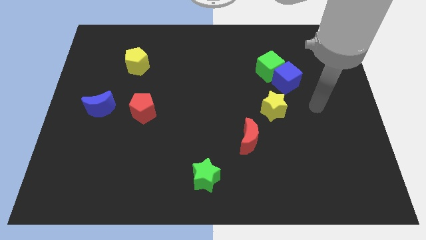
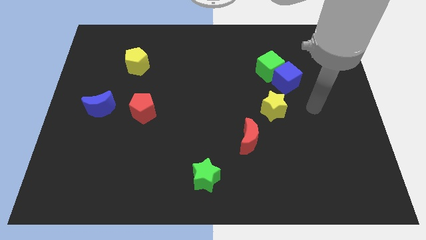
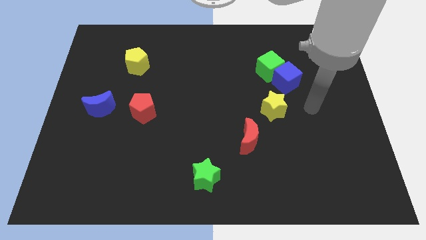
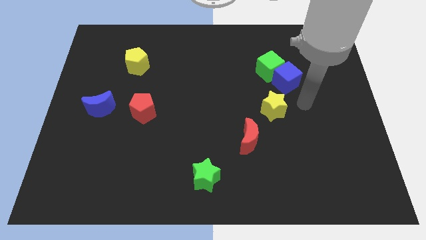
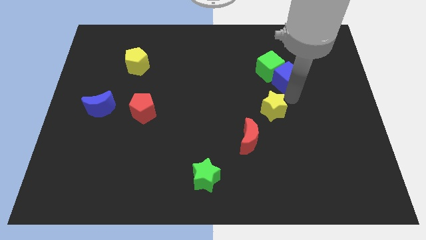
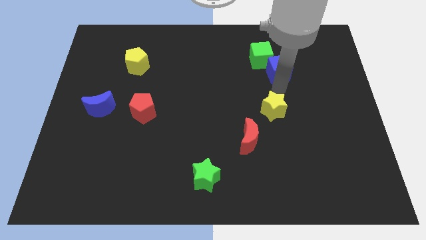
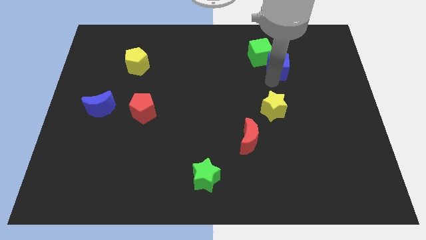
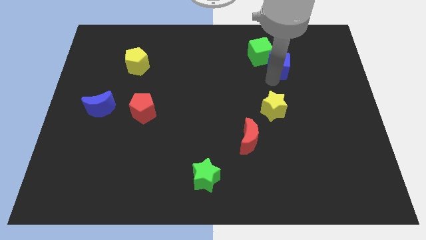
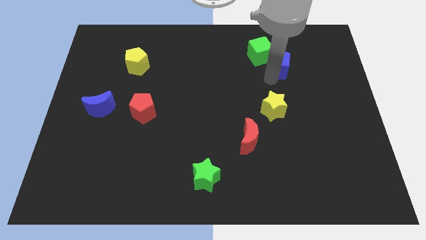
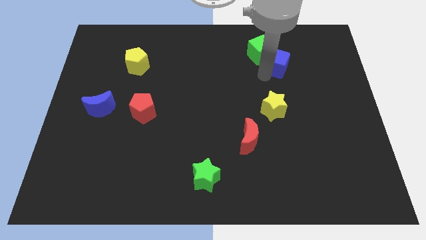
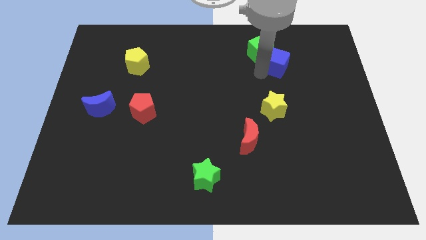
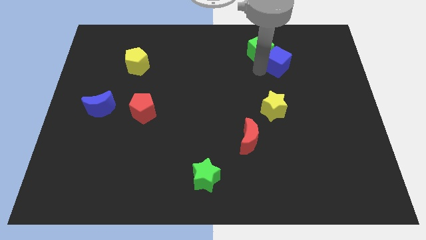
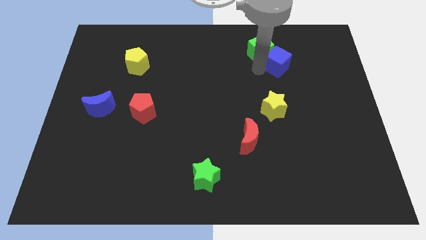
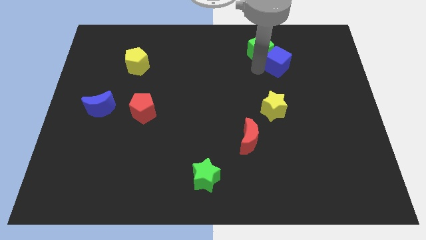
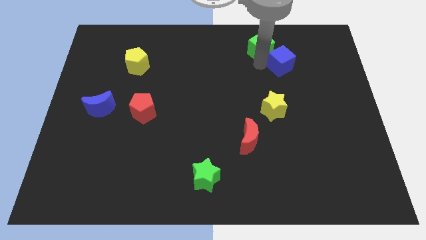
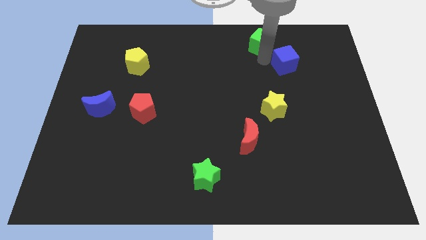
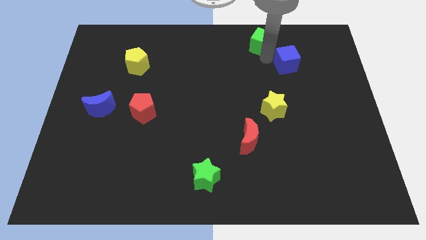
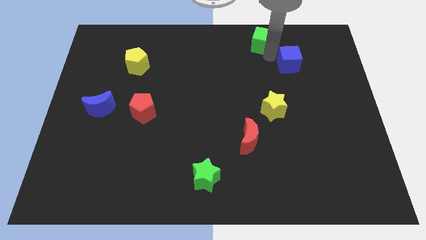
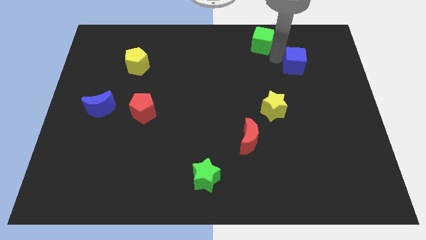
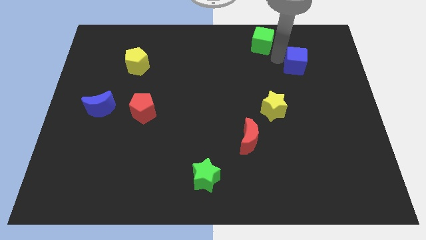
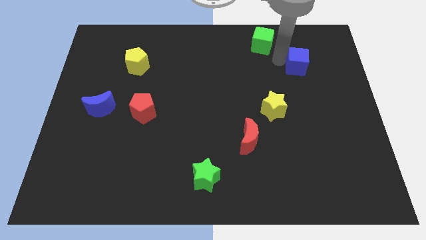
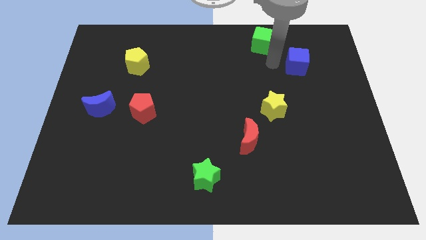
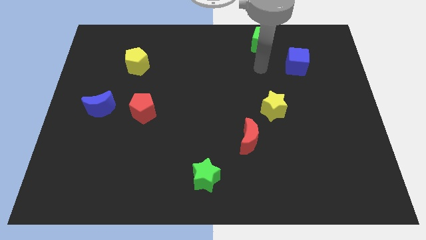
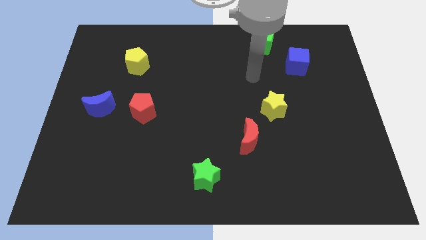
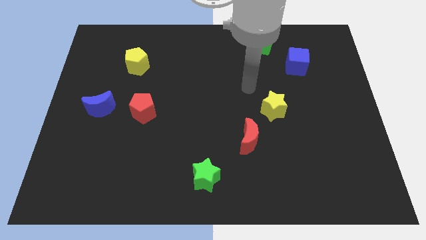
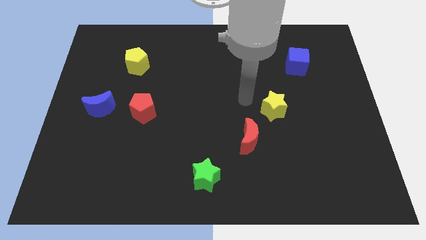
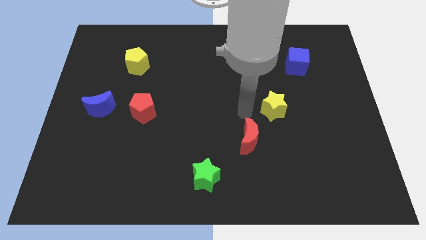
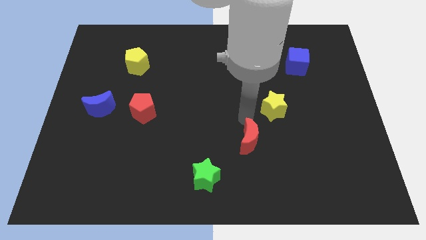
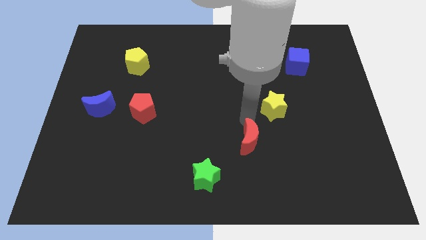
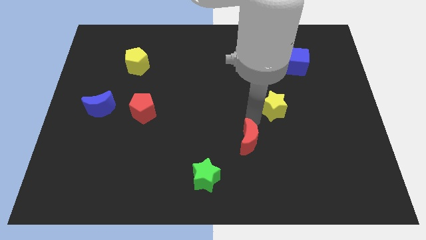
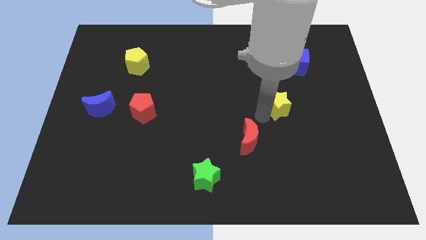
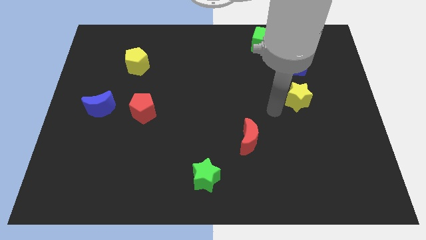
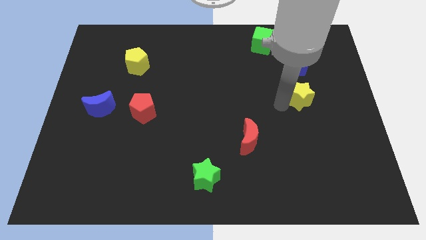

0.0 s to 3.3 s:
separate the green cube from the blue cube

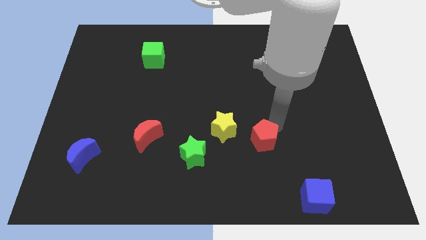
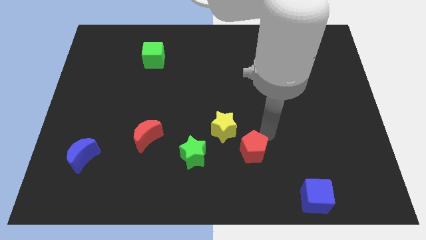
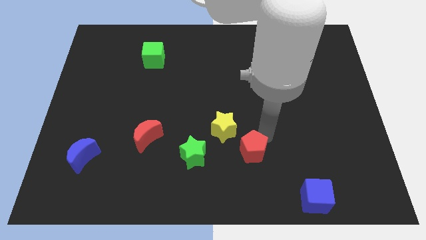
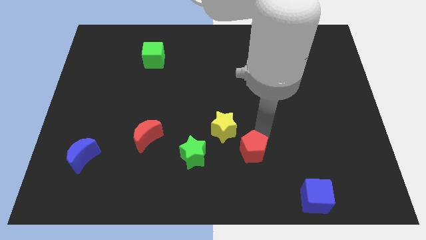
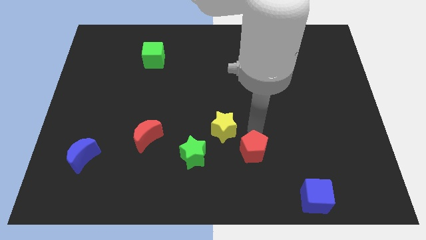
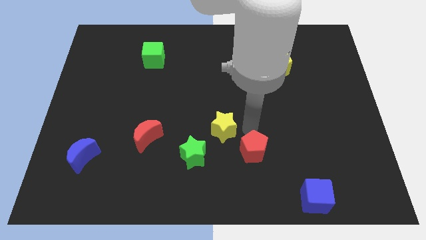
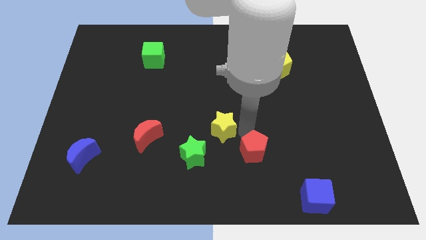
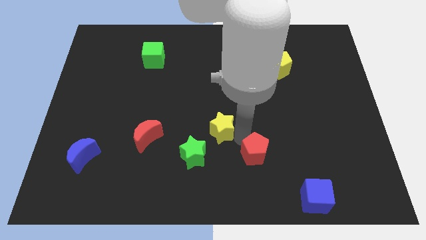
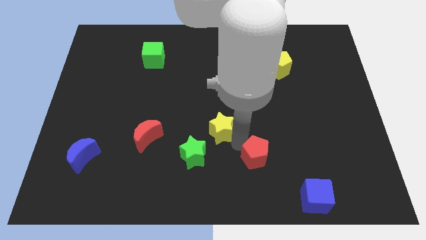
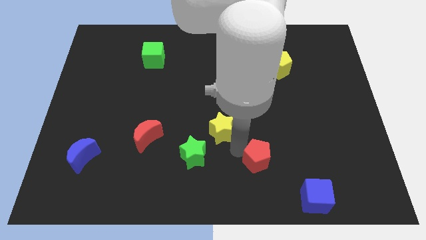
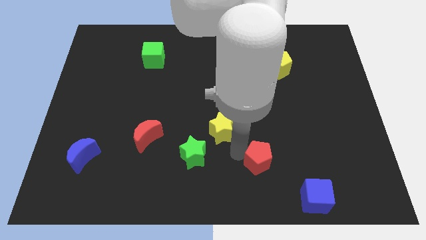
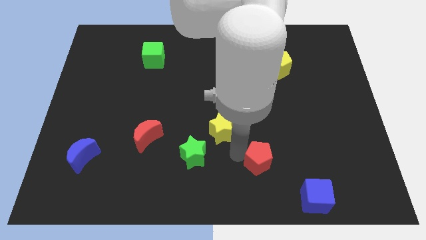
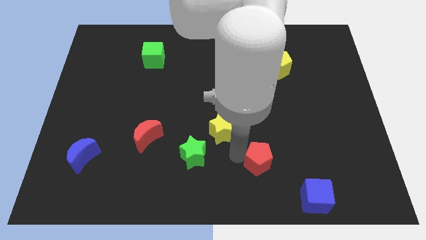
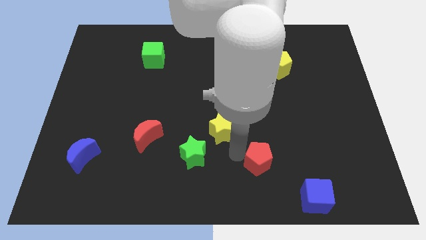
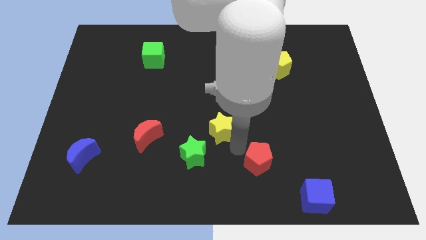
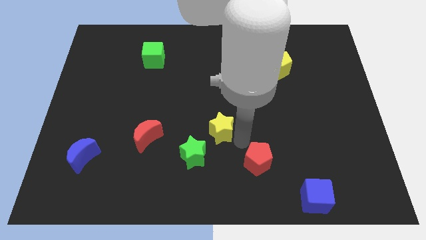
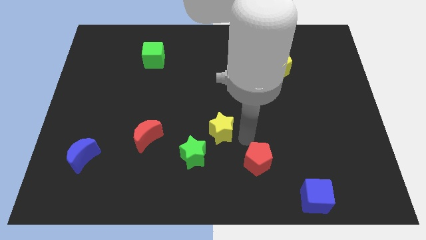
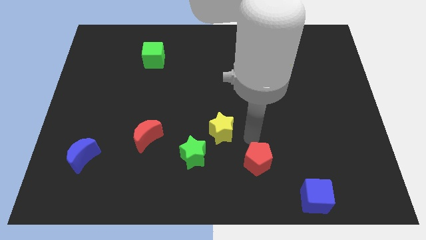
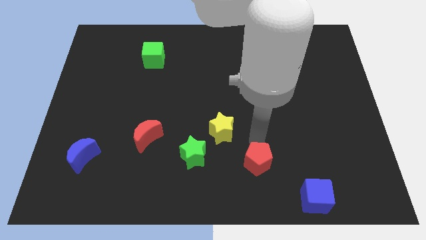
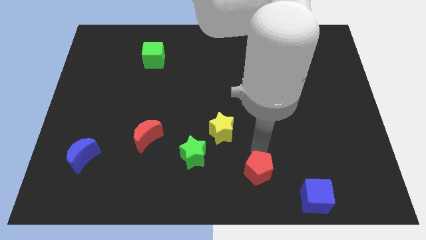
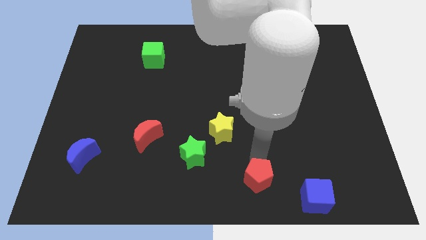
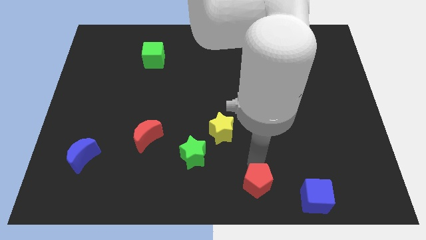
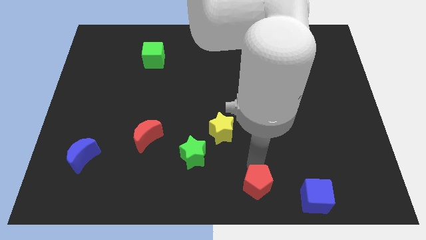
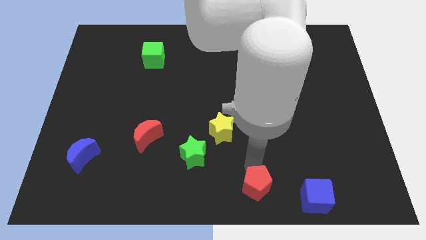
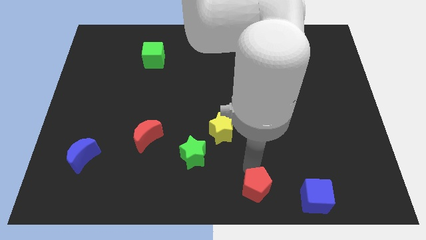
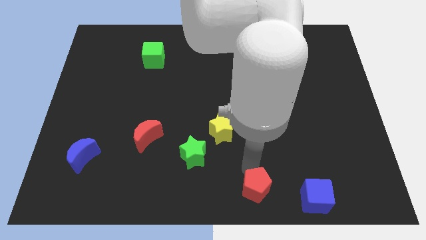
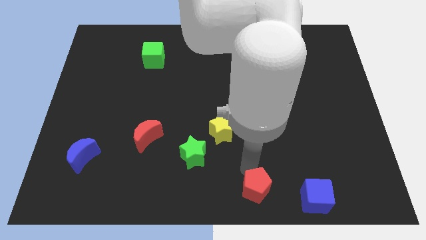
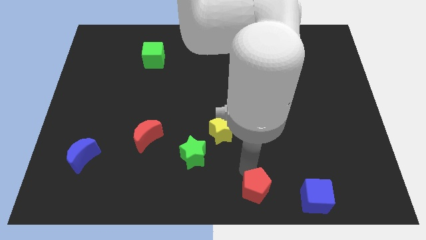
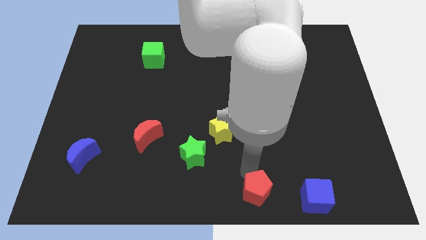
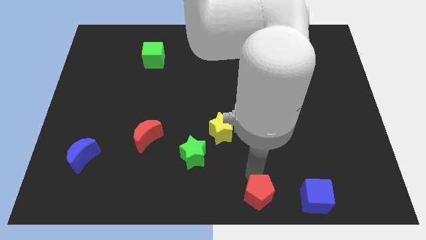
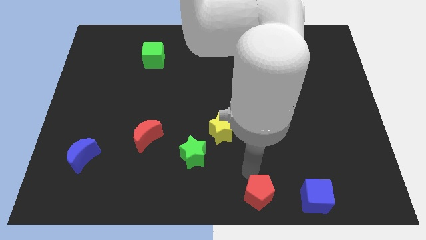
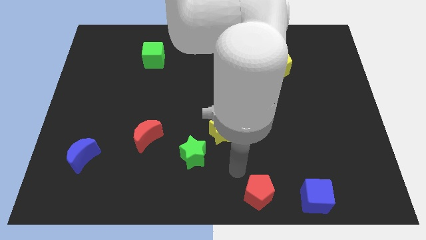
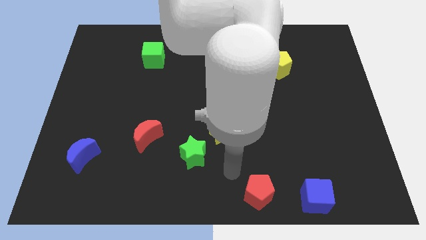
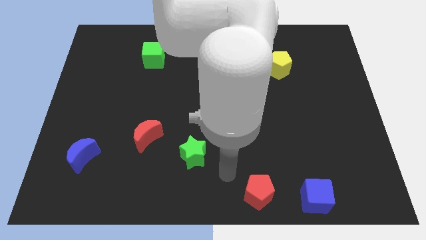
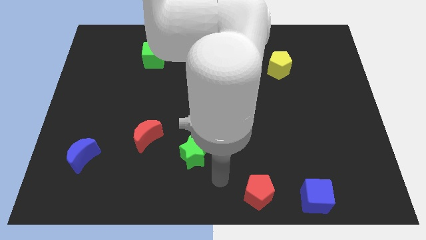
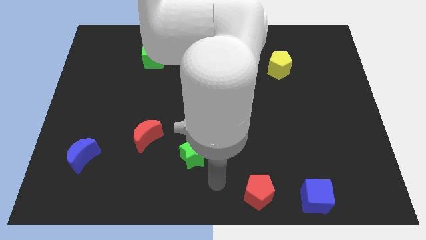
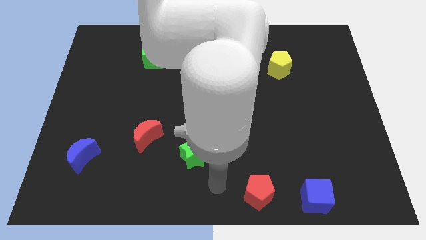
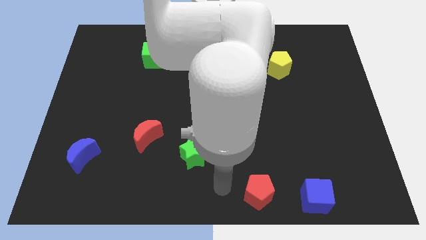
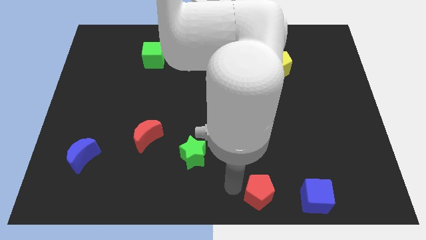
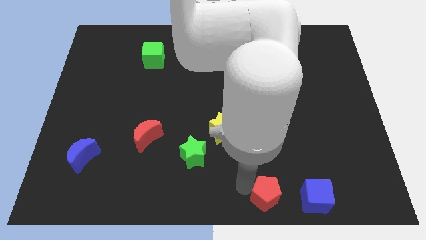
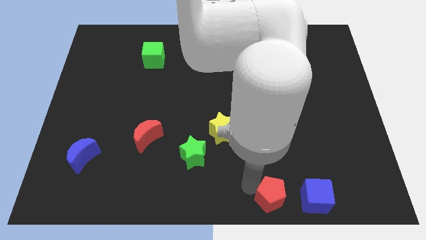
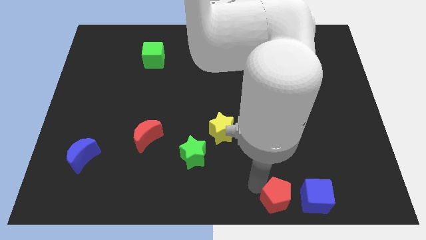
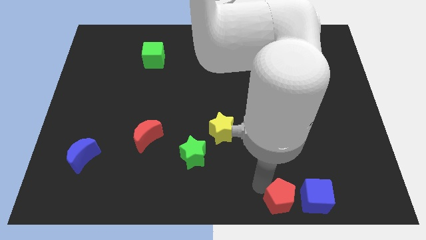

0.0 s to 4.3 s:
push the red pentagon to the left of the blue cube

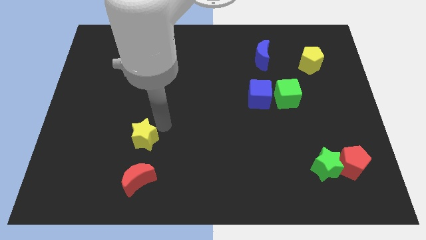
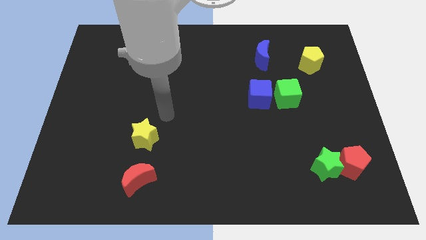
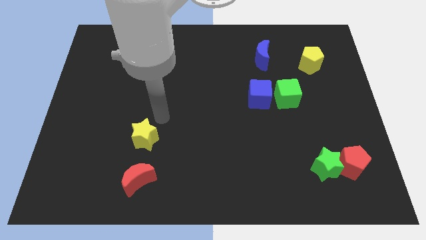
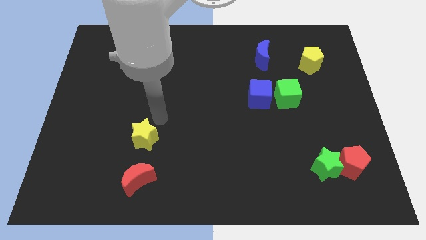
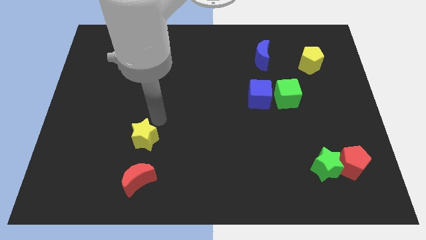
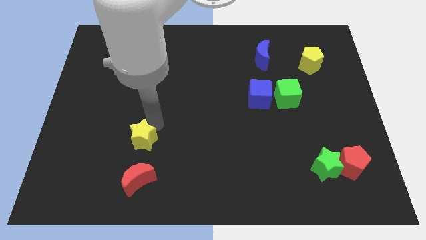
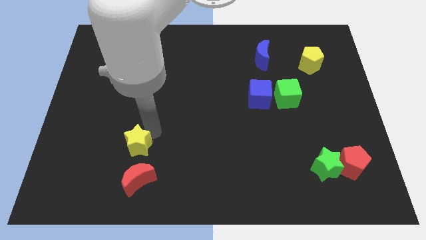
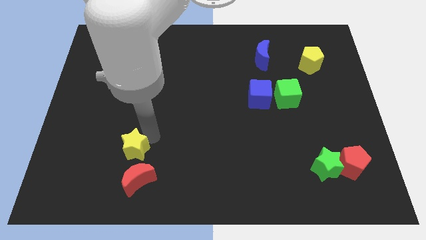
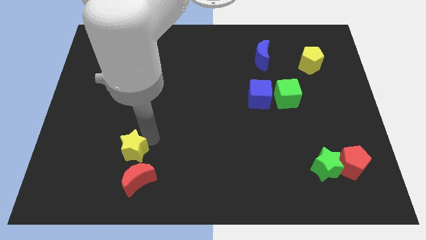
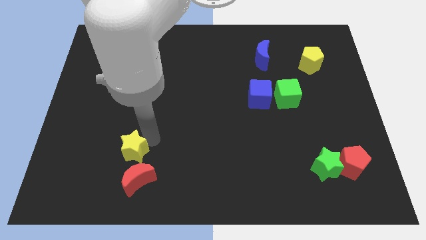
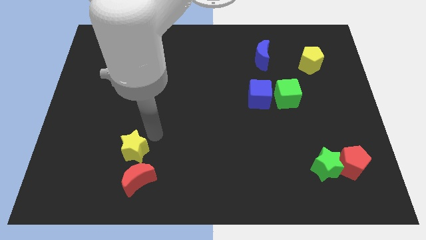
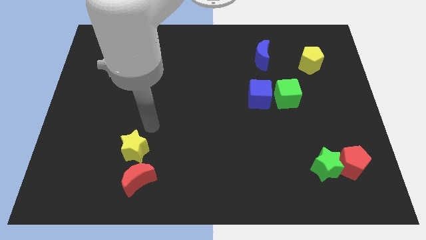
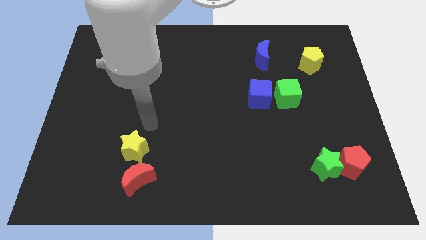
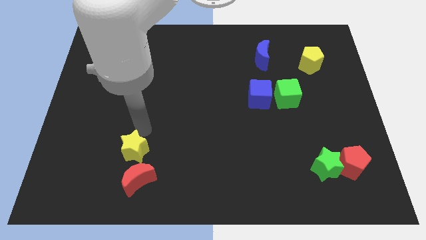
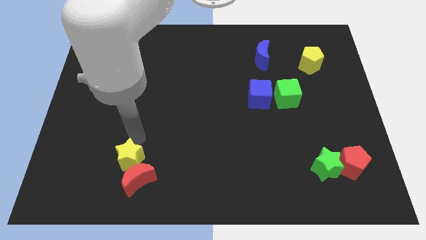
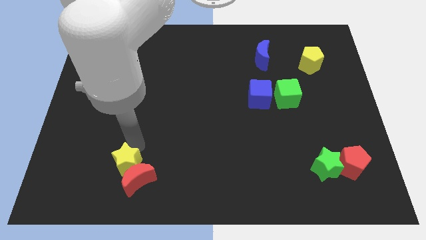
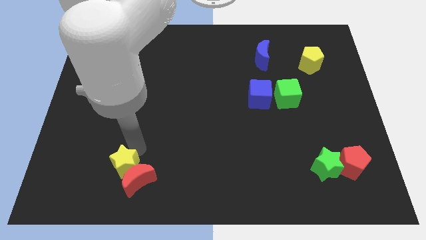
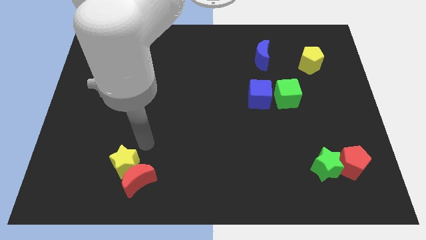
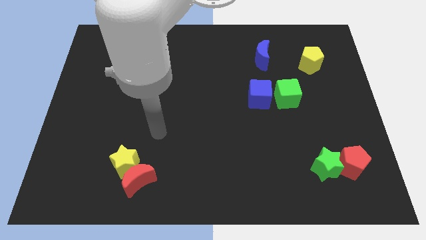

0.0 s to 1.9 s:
move the yellow star into the red crescent
